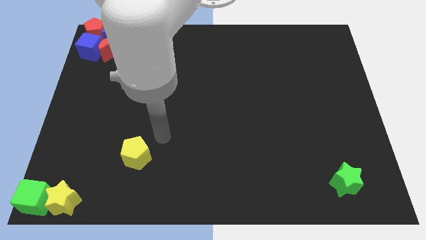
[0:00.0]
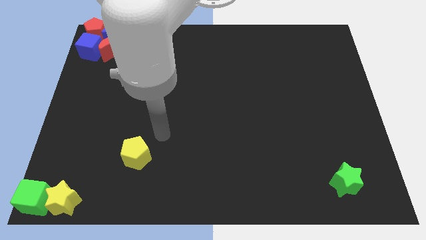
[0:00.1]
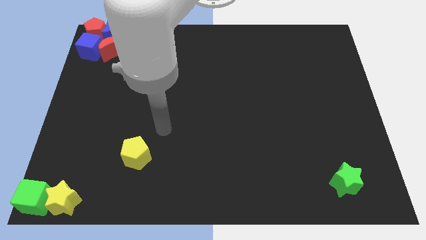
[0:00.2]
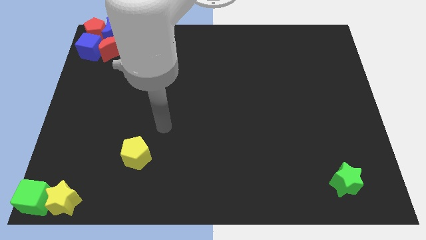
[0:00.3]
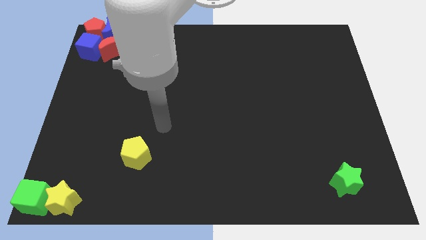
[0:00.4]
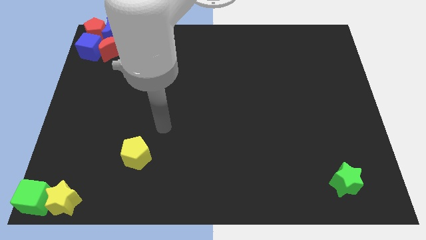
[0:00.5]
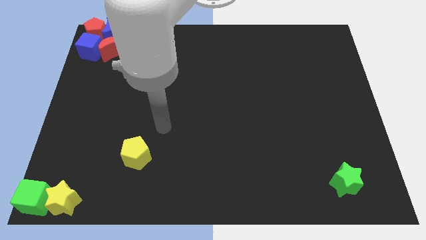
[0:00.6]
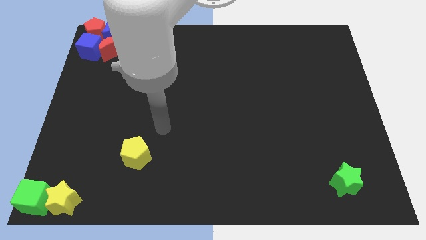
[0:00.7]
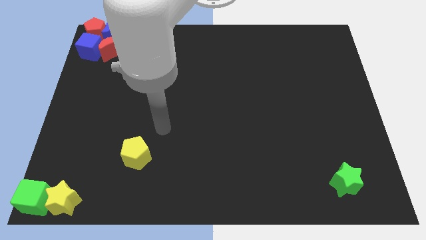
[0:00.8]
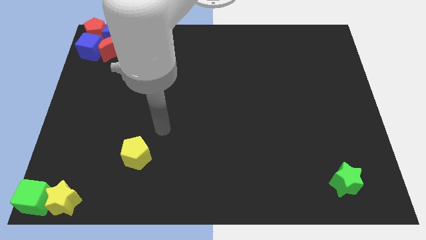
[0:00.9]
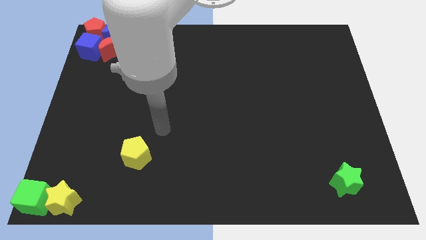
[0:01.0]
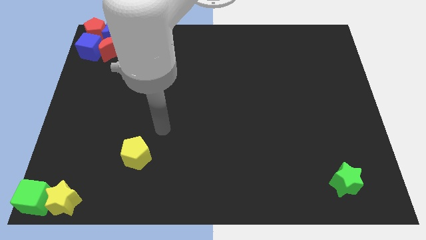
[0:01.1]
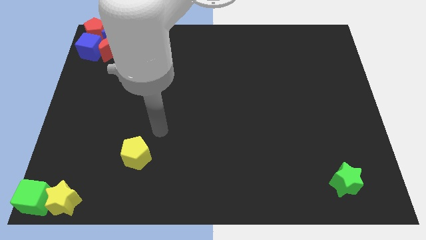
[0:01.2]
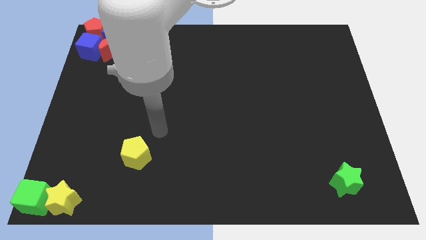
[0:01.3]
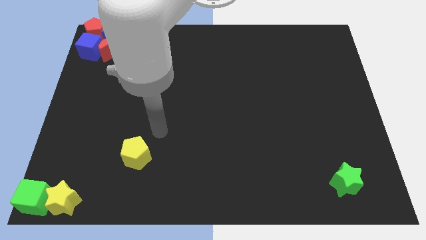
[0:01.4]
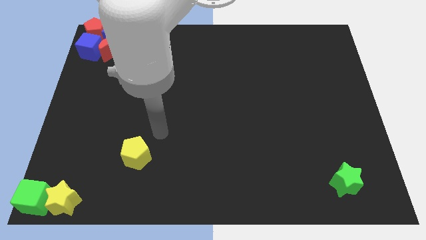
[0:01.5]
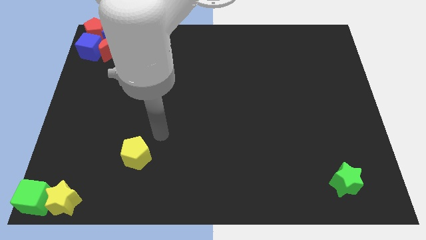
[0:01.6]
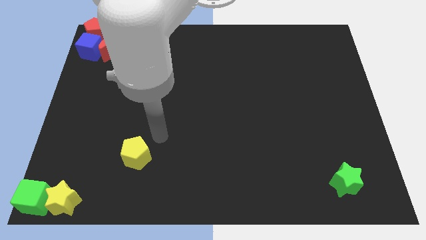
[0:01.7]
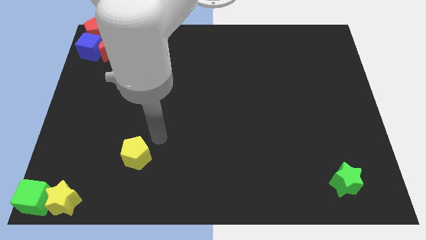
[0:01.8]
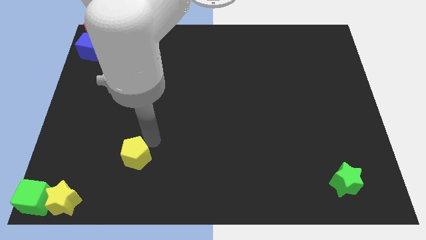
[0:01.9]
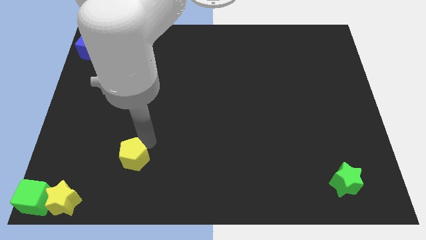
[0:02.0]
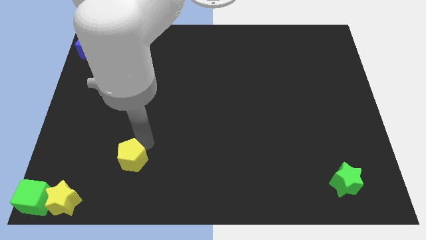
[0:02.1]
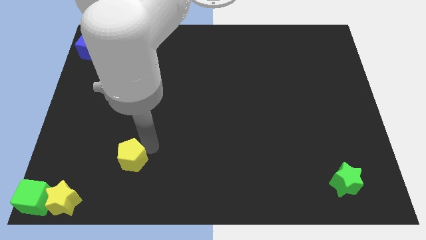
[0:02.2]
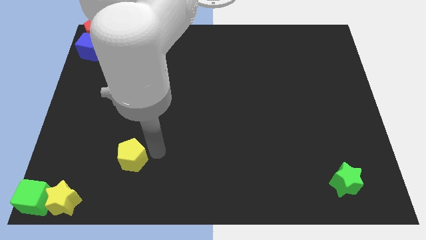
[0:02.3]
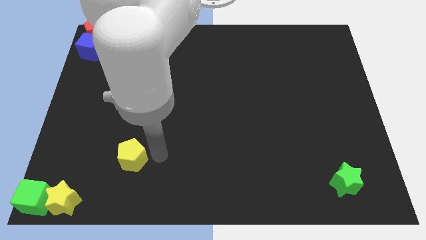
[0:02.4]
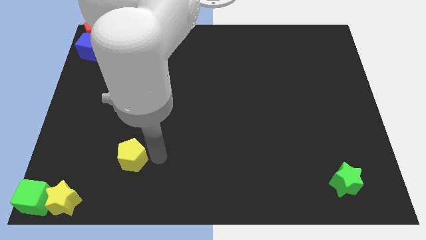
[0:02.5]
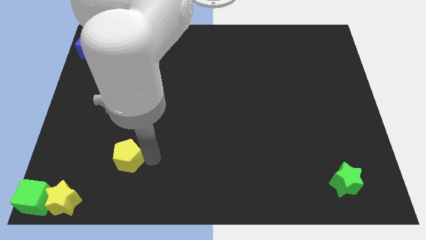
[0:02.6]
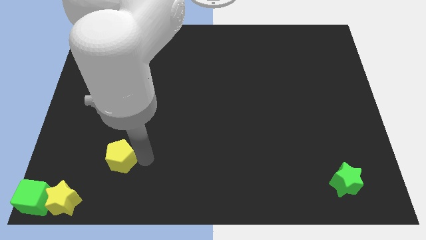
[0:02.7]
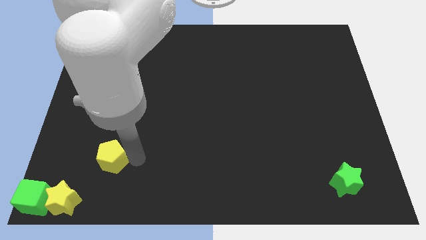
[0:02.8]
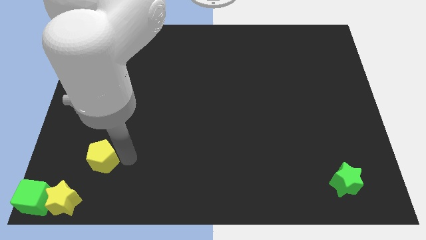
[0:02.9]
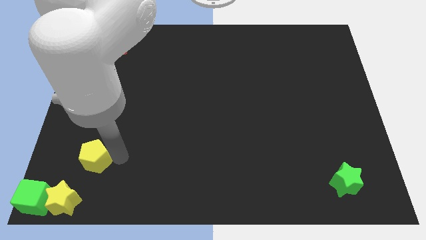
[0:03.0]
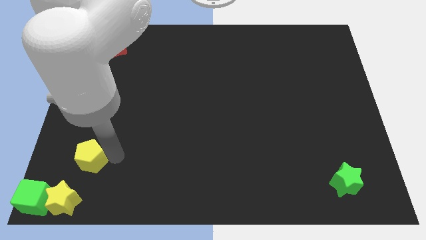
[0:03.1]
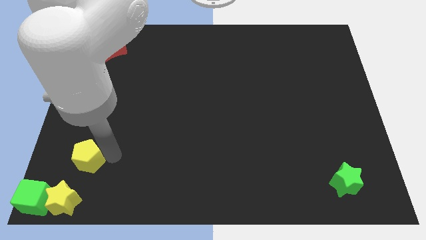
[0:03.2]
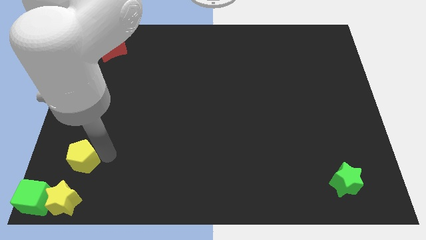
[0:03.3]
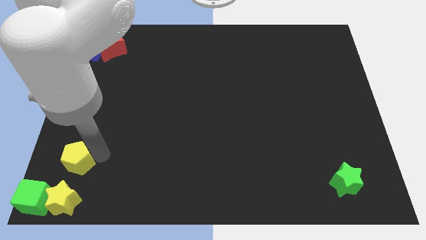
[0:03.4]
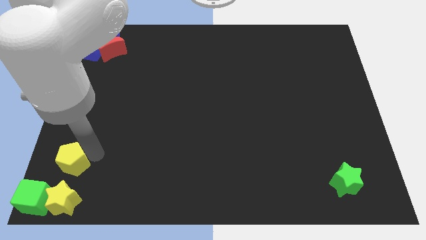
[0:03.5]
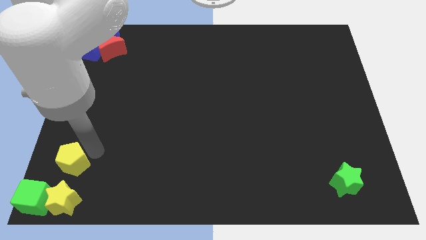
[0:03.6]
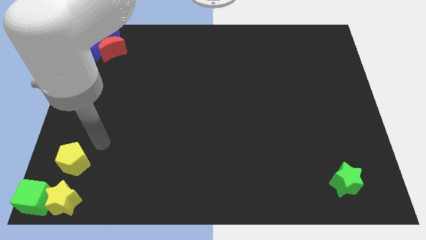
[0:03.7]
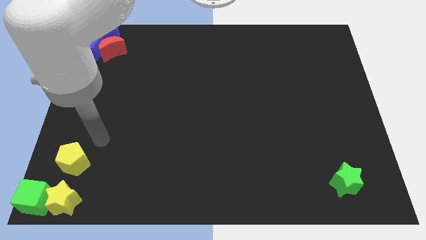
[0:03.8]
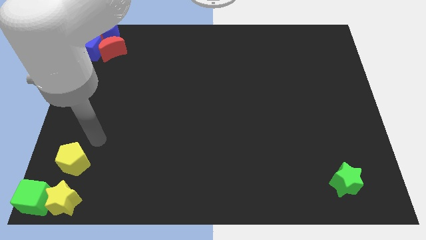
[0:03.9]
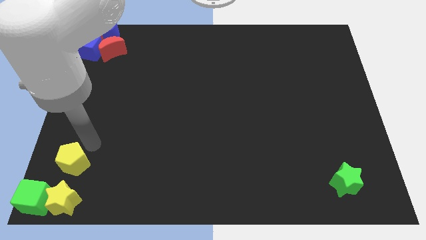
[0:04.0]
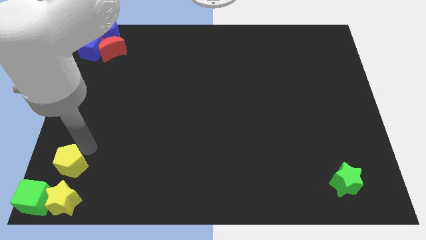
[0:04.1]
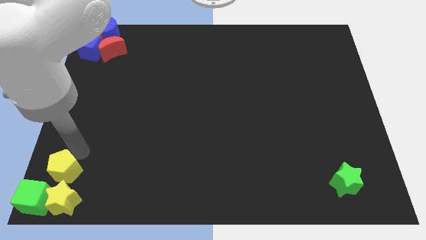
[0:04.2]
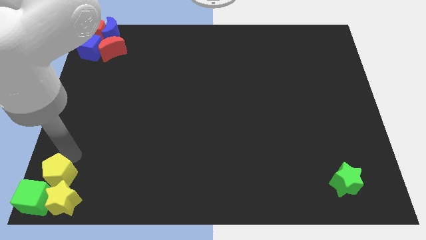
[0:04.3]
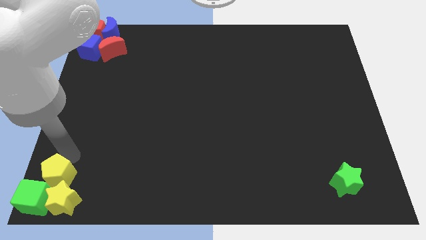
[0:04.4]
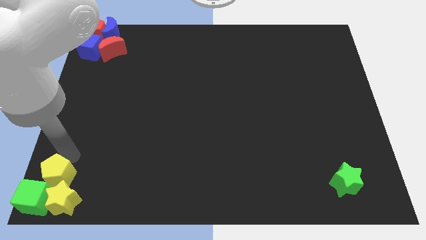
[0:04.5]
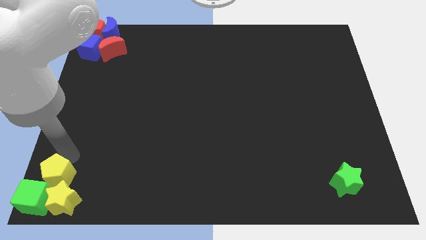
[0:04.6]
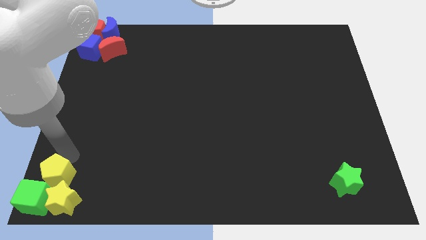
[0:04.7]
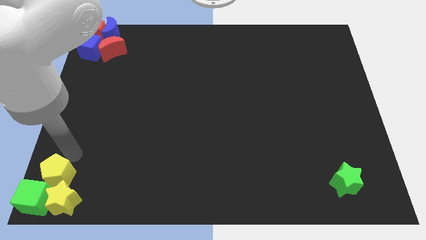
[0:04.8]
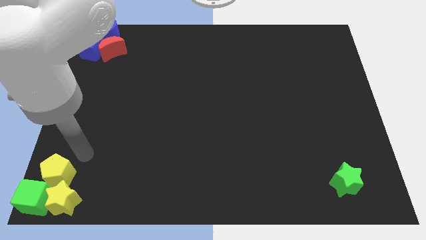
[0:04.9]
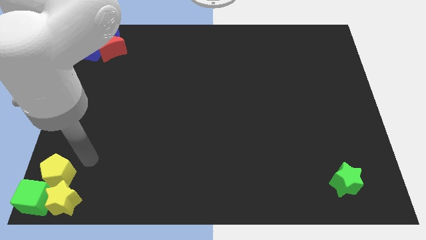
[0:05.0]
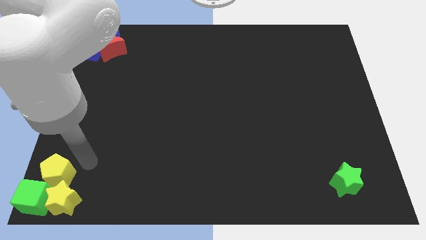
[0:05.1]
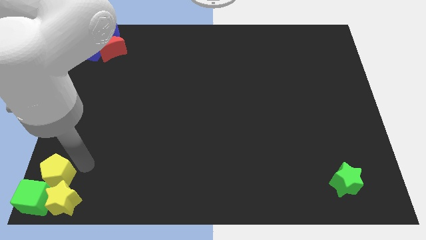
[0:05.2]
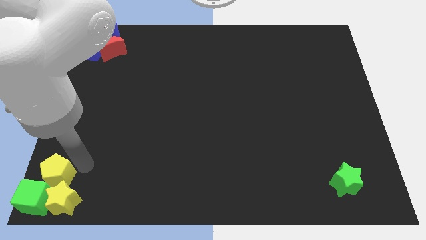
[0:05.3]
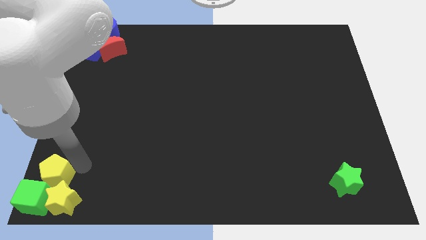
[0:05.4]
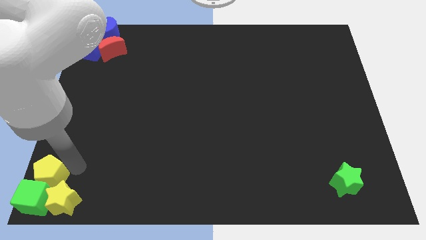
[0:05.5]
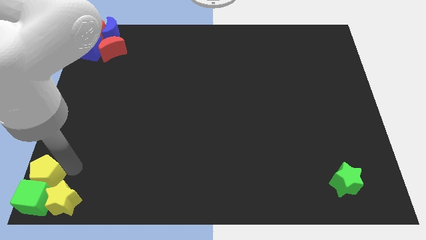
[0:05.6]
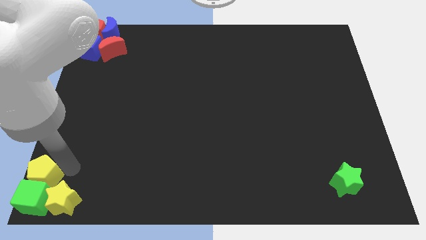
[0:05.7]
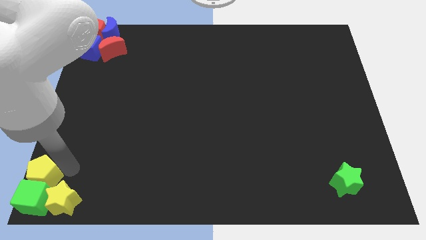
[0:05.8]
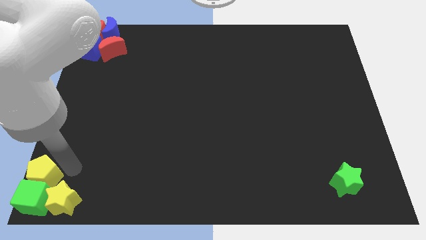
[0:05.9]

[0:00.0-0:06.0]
slide the yellow pentagon into the top side of the green cube

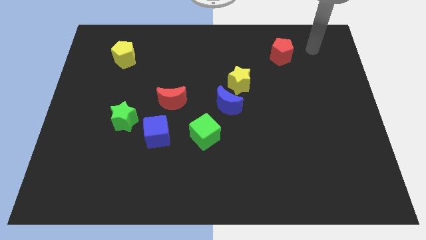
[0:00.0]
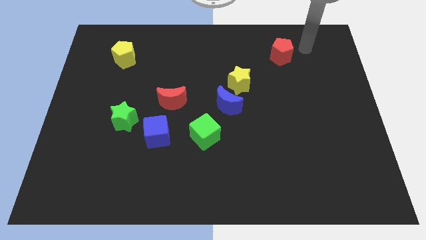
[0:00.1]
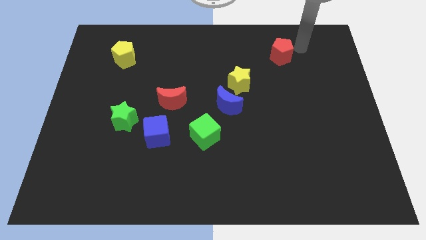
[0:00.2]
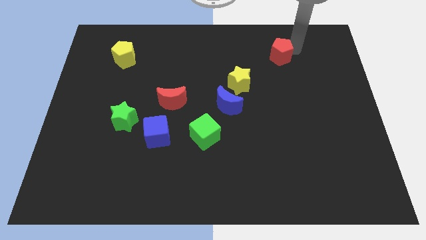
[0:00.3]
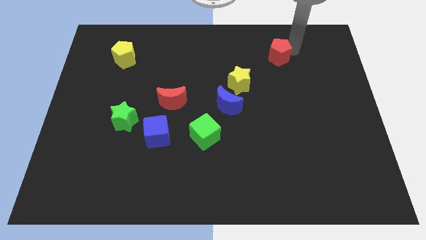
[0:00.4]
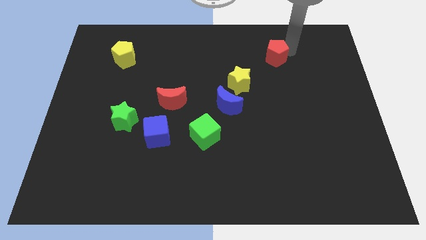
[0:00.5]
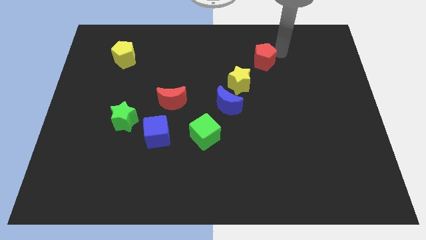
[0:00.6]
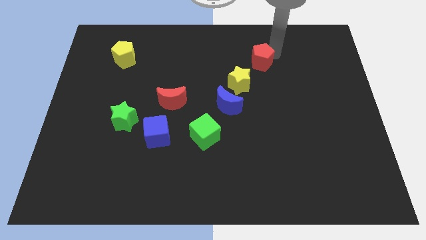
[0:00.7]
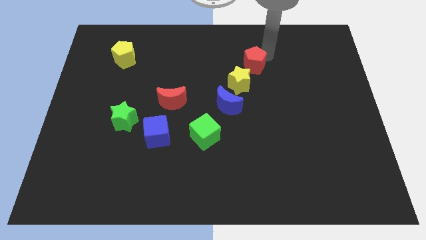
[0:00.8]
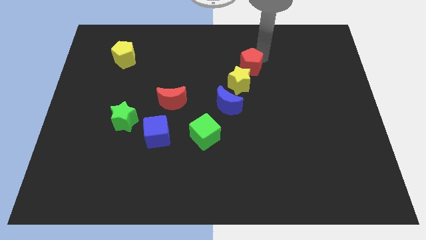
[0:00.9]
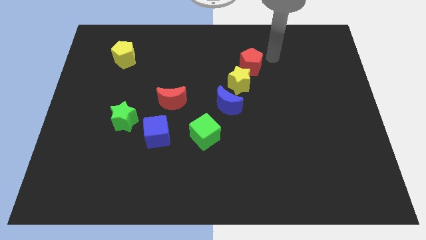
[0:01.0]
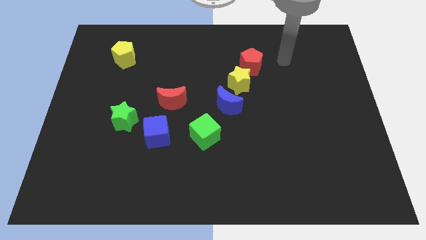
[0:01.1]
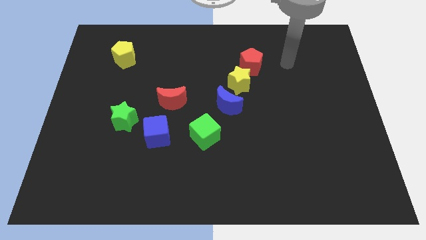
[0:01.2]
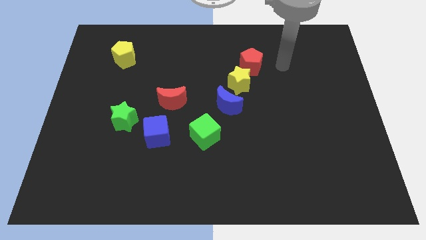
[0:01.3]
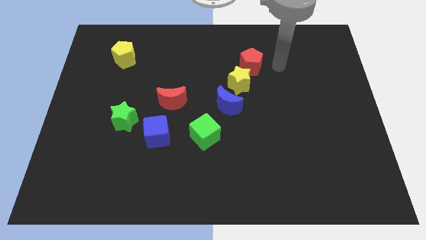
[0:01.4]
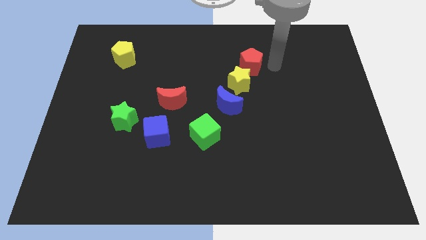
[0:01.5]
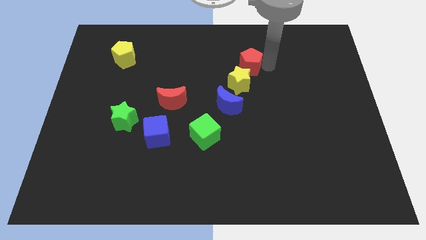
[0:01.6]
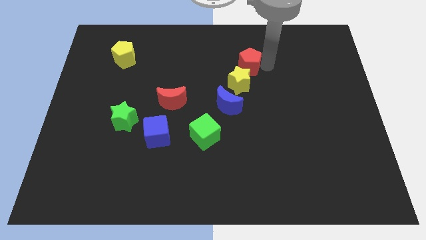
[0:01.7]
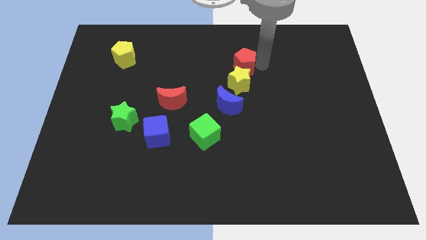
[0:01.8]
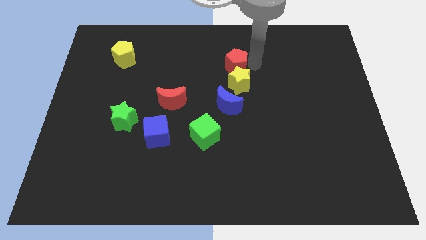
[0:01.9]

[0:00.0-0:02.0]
place the red pentagon vertically above the yellow star

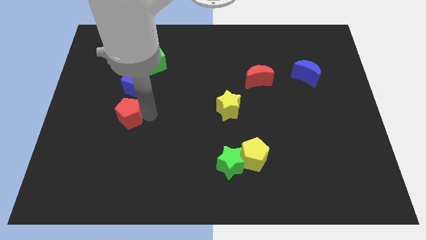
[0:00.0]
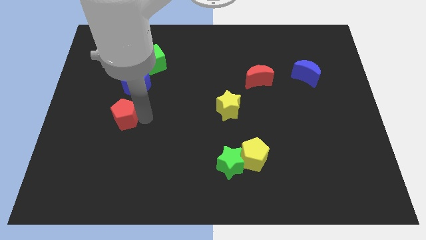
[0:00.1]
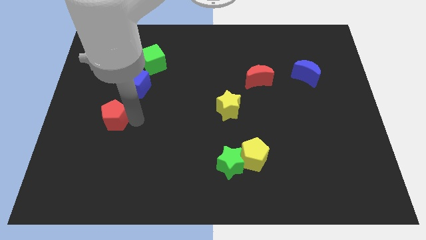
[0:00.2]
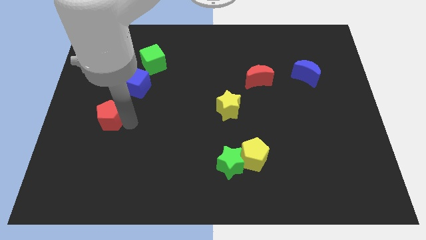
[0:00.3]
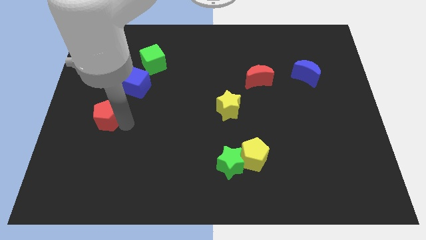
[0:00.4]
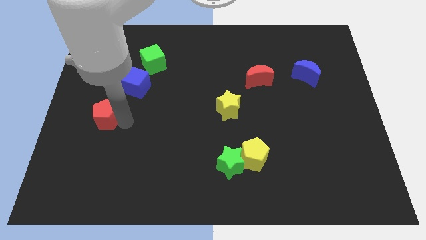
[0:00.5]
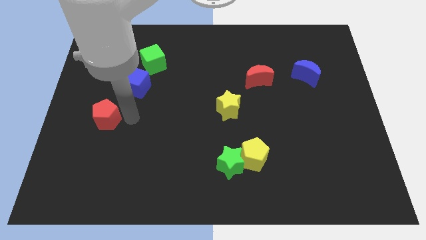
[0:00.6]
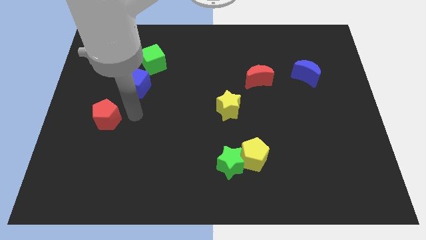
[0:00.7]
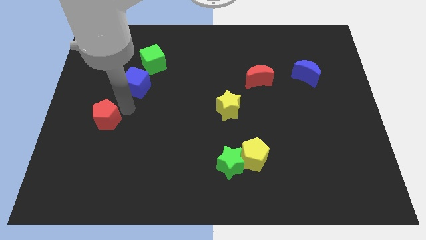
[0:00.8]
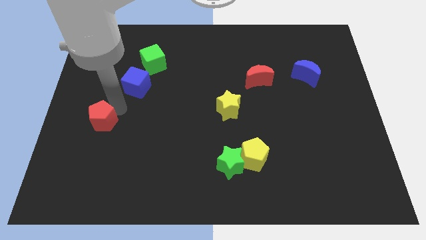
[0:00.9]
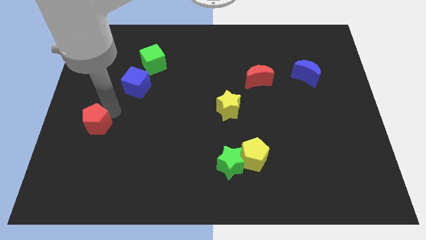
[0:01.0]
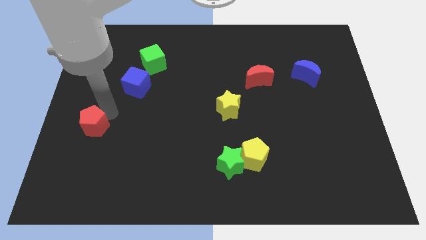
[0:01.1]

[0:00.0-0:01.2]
push the red pentagon to the left center of the board
